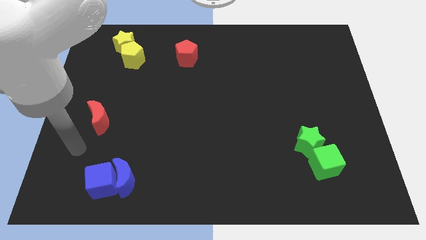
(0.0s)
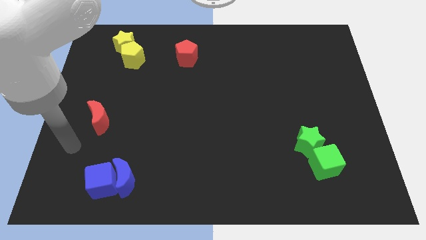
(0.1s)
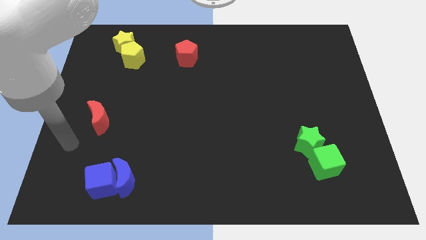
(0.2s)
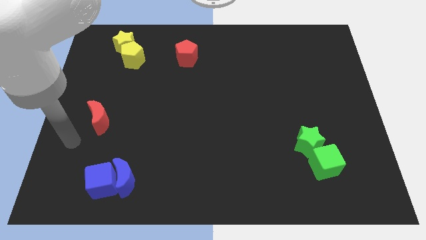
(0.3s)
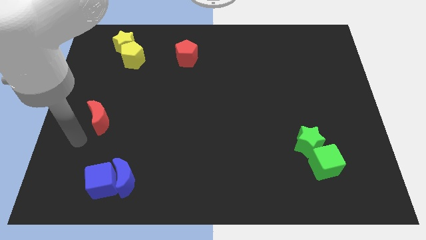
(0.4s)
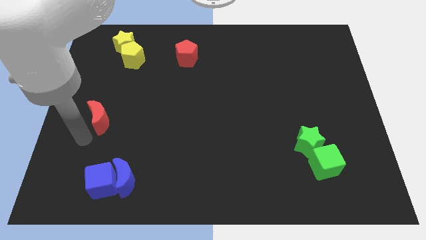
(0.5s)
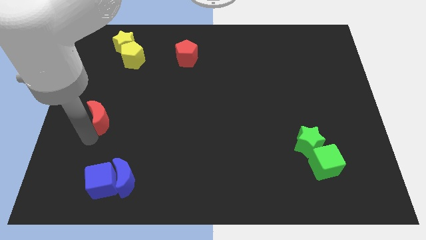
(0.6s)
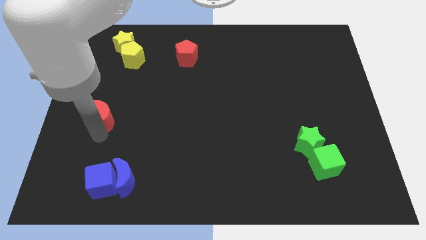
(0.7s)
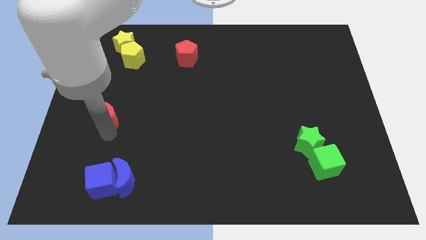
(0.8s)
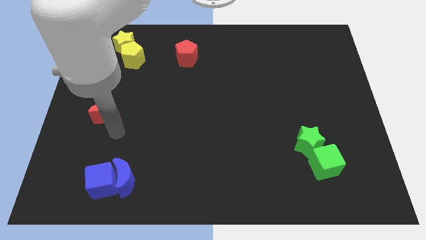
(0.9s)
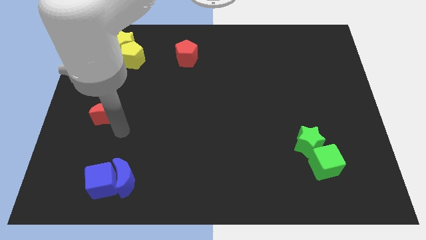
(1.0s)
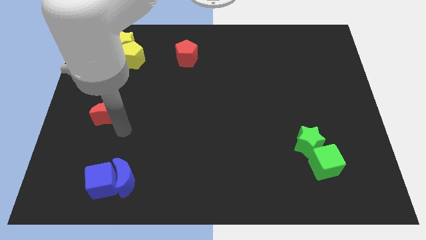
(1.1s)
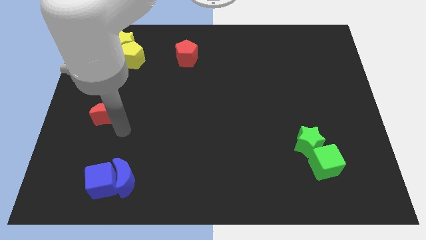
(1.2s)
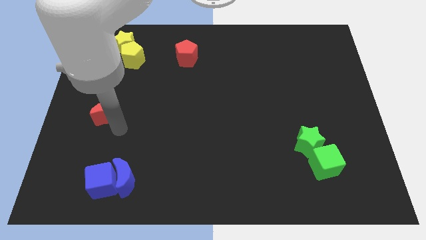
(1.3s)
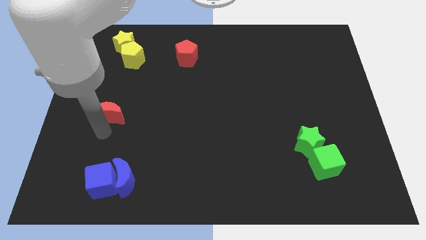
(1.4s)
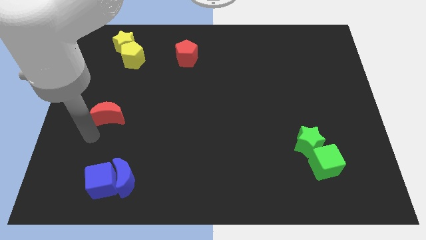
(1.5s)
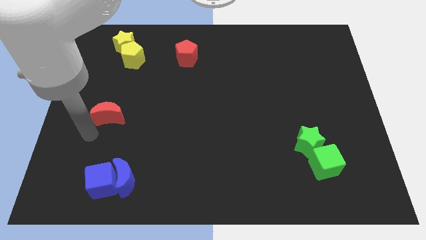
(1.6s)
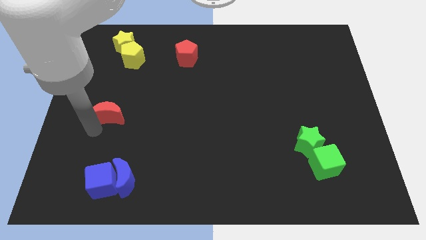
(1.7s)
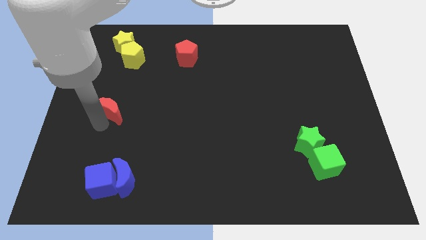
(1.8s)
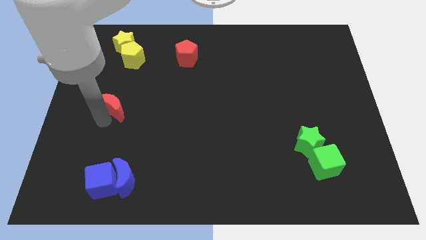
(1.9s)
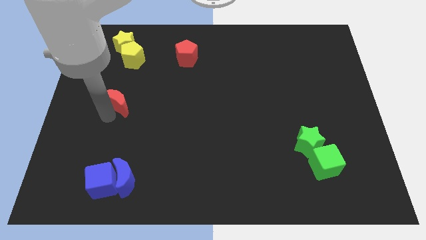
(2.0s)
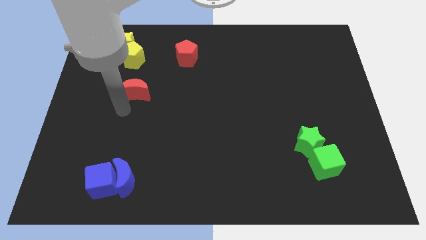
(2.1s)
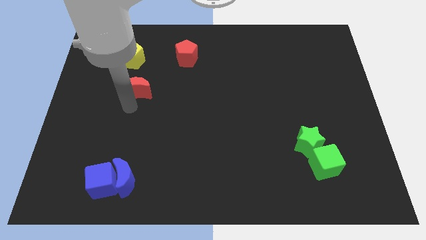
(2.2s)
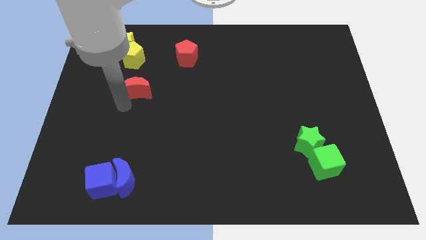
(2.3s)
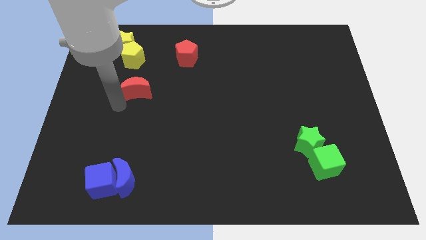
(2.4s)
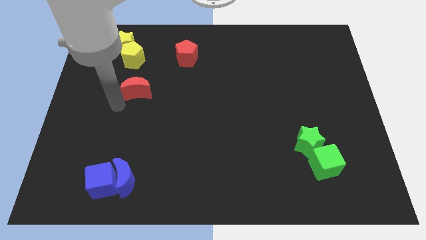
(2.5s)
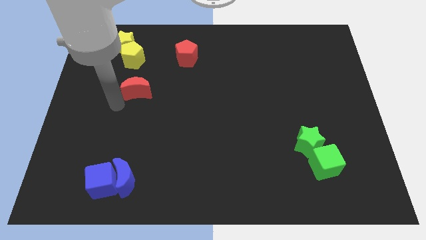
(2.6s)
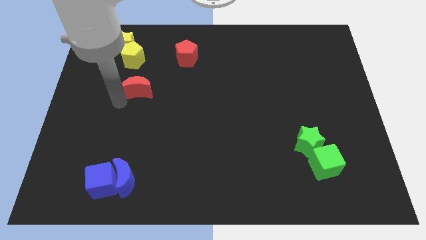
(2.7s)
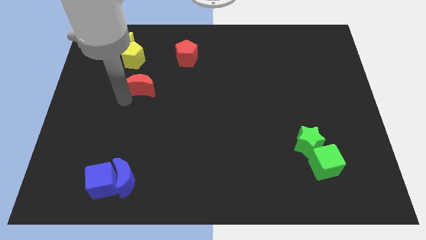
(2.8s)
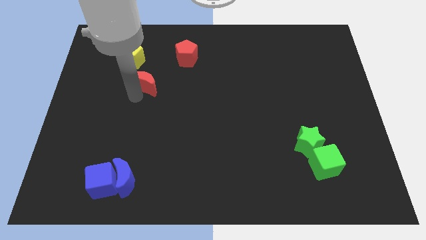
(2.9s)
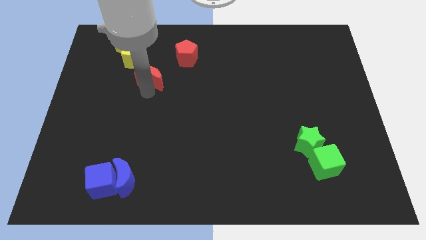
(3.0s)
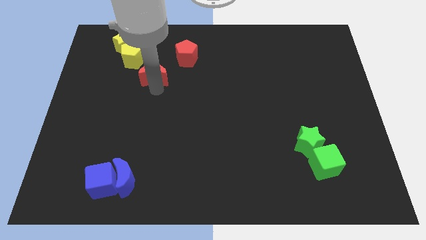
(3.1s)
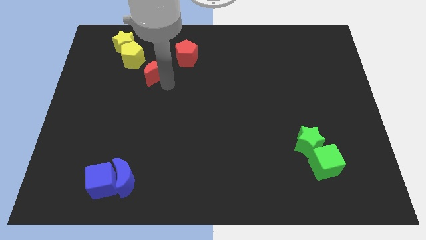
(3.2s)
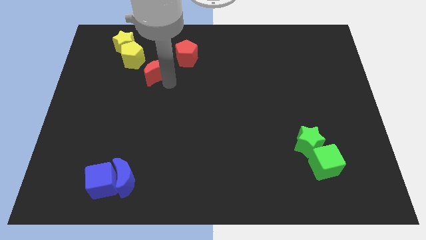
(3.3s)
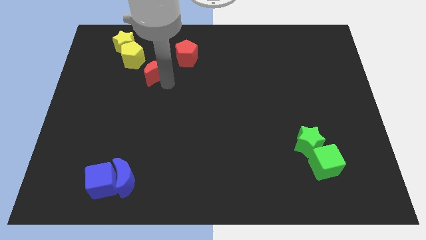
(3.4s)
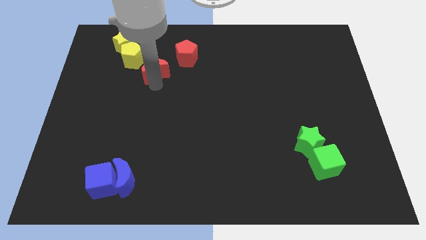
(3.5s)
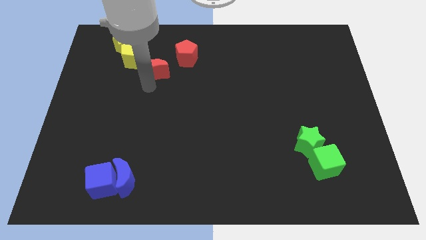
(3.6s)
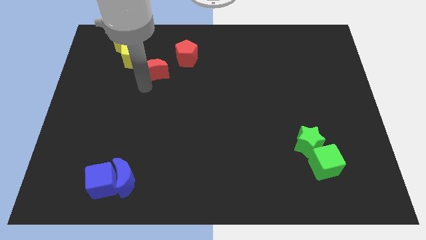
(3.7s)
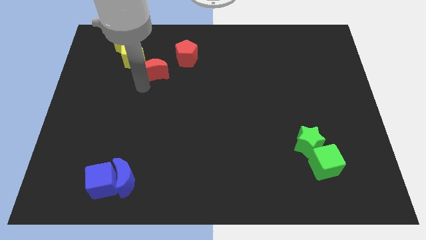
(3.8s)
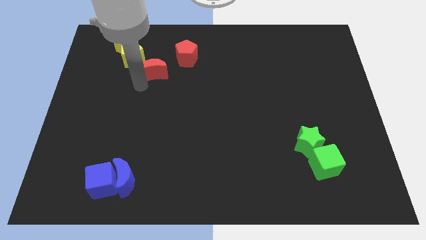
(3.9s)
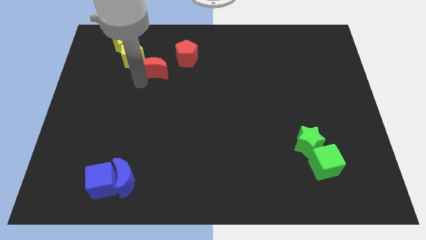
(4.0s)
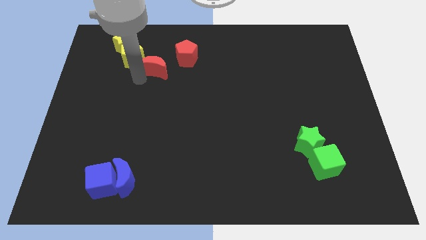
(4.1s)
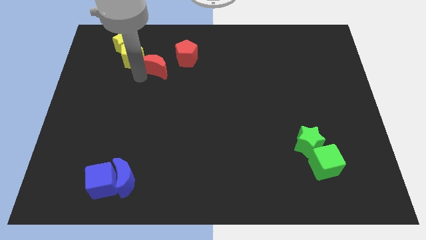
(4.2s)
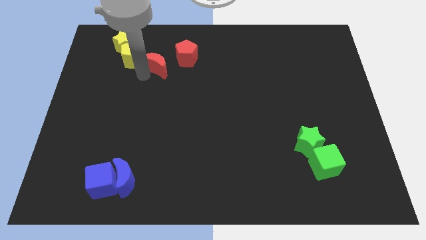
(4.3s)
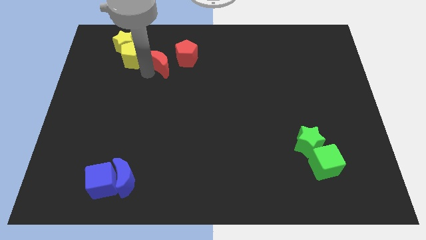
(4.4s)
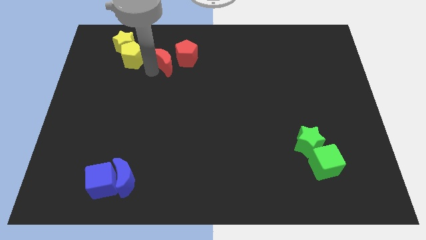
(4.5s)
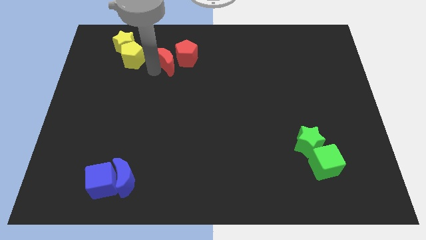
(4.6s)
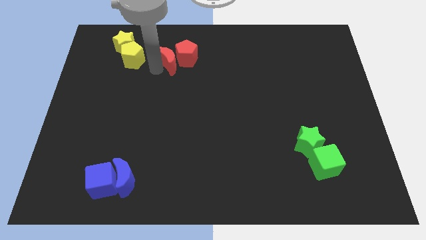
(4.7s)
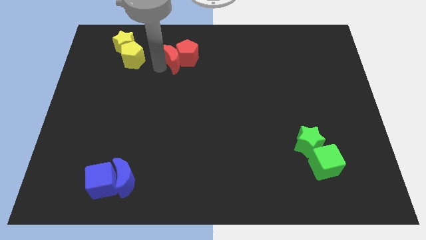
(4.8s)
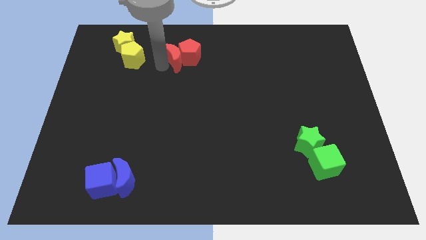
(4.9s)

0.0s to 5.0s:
push the red moon into red pentagon

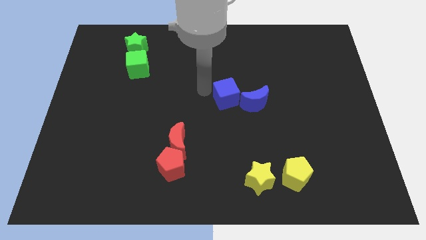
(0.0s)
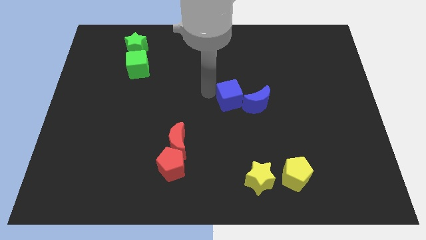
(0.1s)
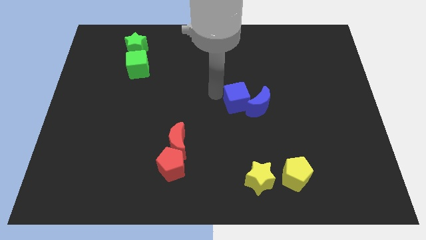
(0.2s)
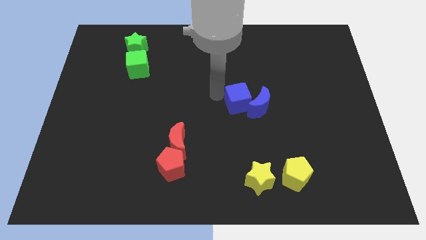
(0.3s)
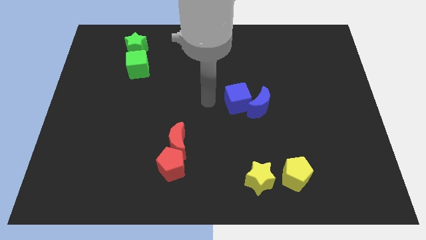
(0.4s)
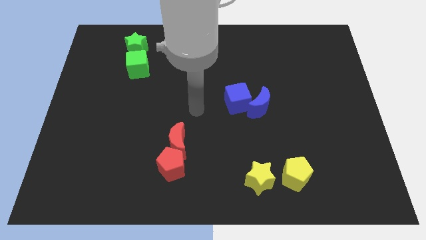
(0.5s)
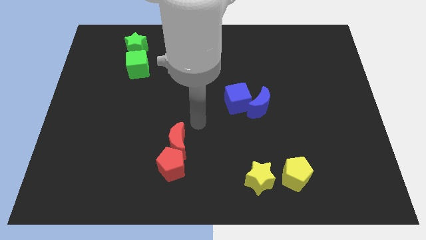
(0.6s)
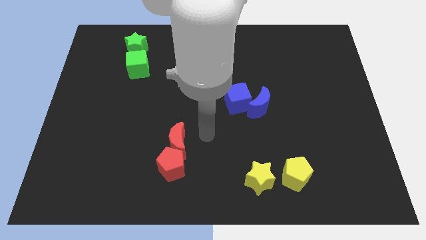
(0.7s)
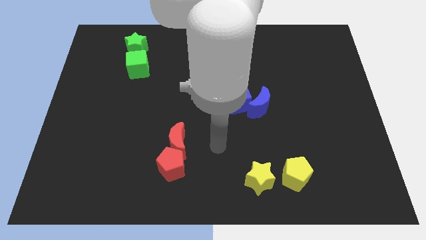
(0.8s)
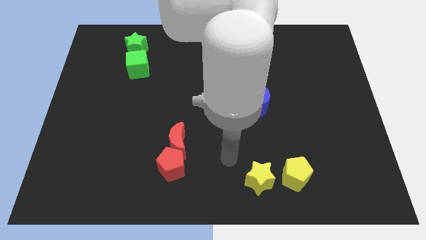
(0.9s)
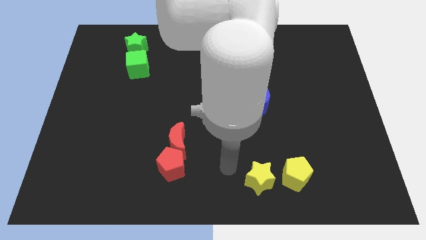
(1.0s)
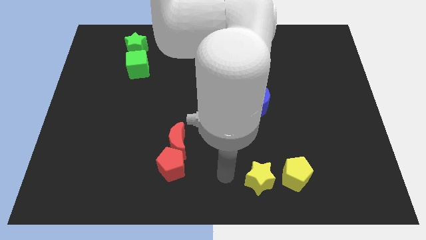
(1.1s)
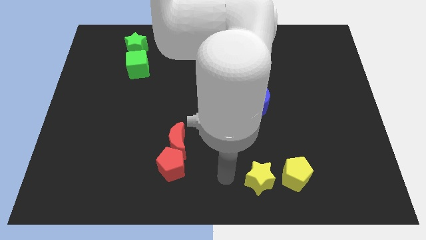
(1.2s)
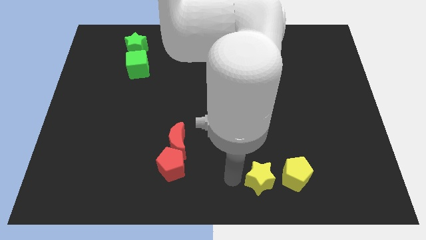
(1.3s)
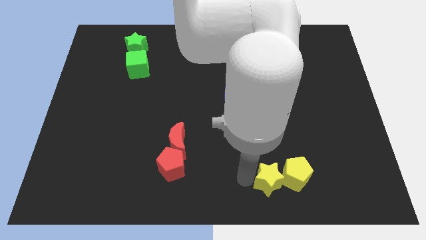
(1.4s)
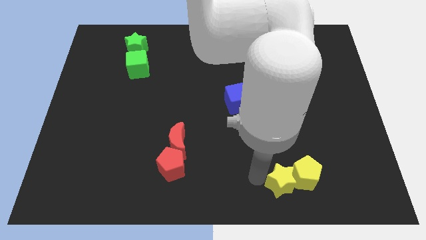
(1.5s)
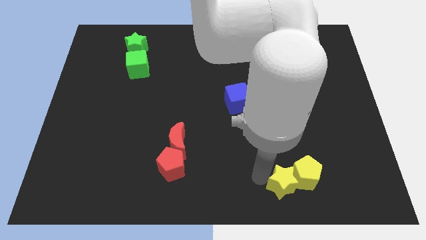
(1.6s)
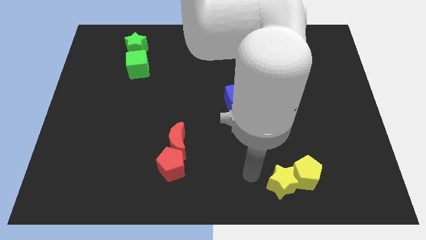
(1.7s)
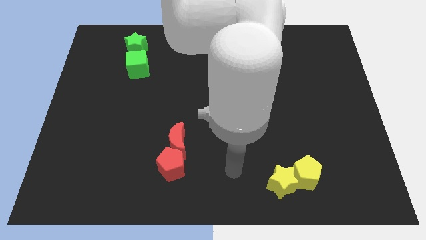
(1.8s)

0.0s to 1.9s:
move the yellow star right towards the yellow pentagon

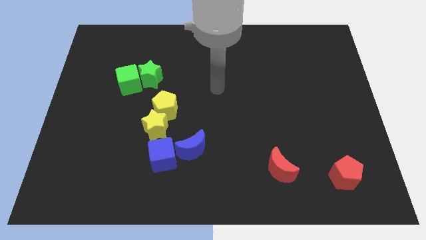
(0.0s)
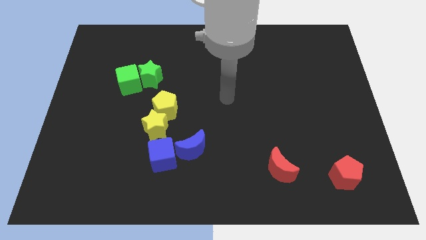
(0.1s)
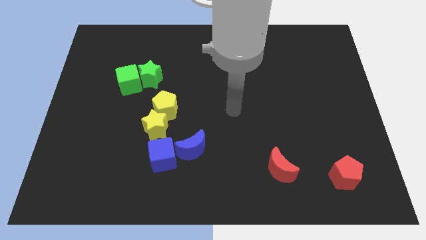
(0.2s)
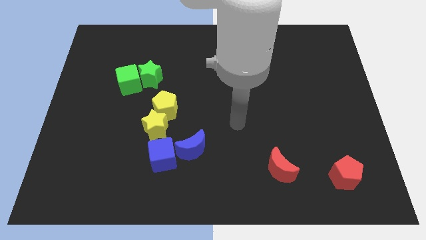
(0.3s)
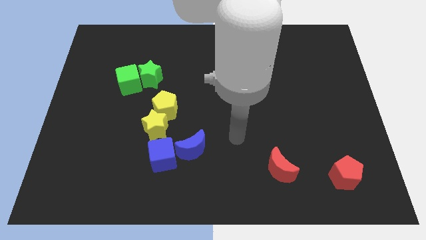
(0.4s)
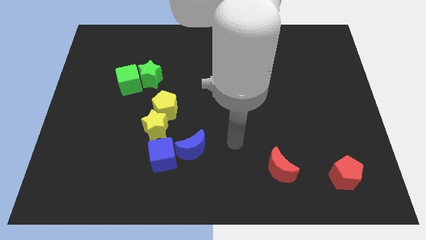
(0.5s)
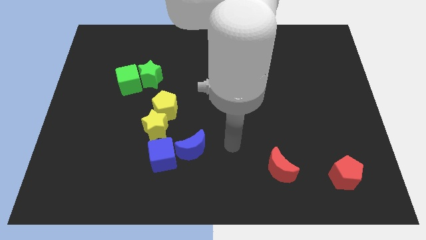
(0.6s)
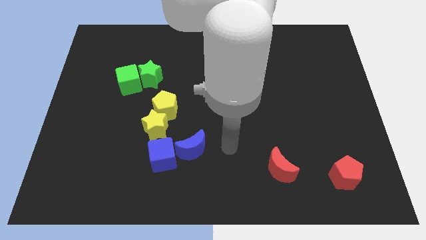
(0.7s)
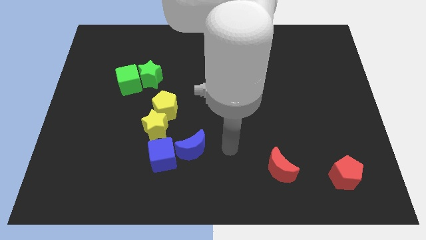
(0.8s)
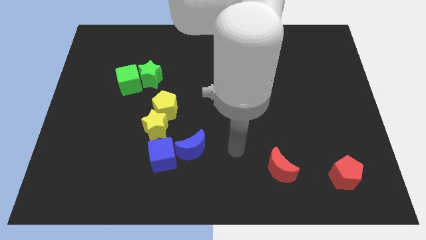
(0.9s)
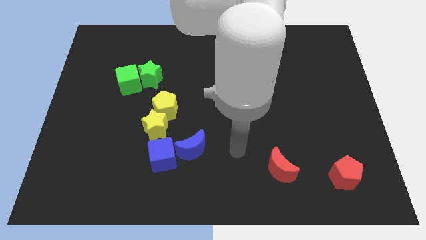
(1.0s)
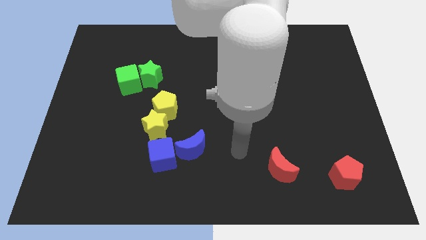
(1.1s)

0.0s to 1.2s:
put your hand at the right side of the group of blue blocks

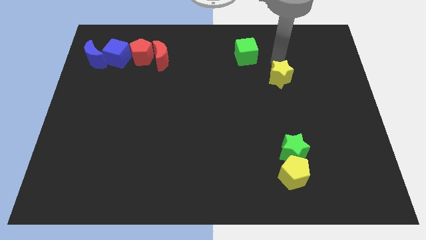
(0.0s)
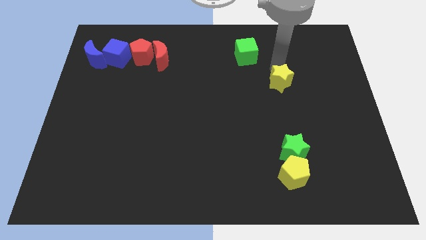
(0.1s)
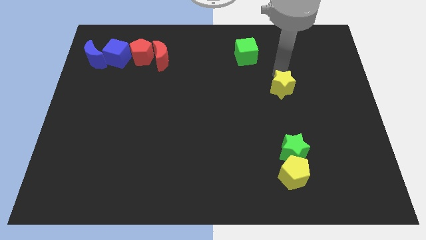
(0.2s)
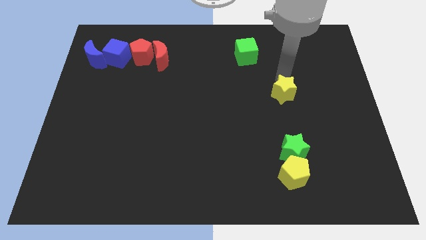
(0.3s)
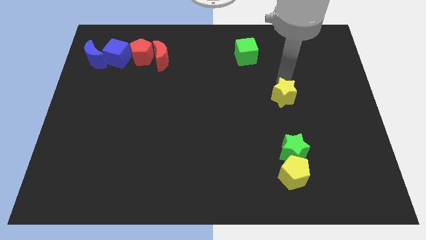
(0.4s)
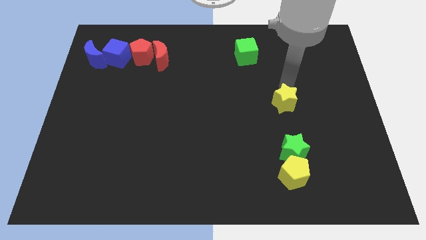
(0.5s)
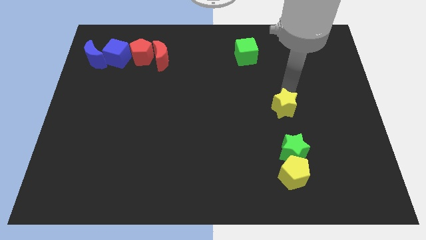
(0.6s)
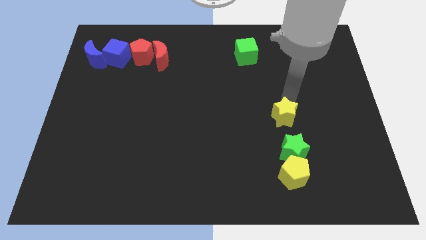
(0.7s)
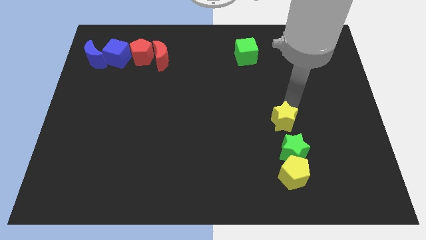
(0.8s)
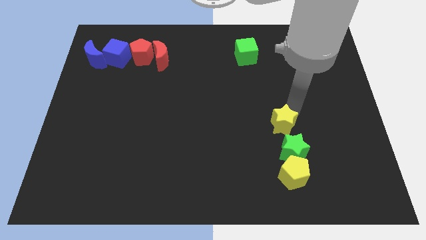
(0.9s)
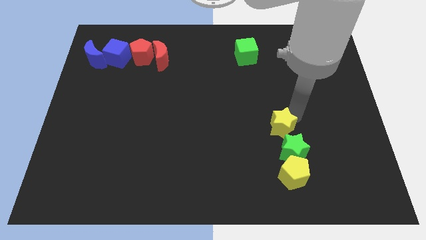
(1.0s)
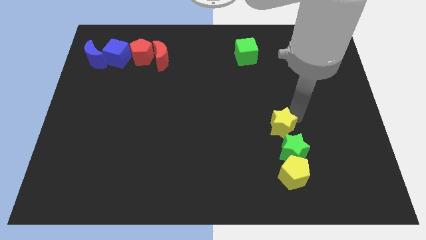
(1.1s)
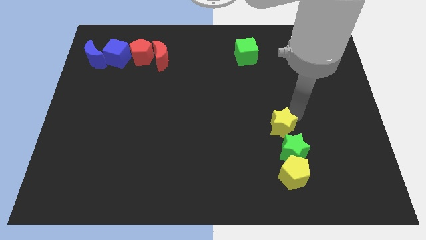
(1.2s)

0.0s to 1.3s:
push the yellow star to the top left side of the green star
